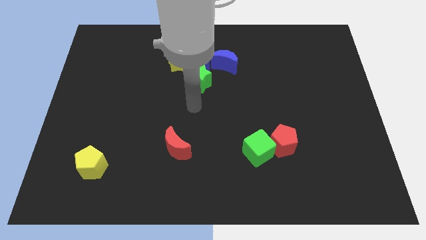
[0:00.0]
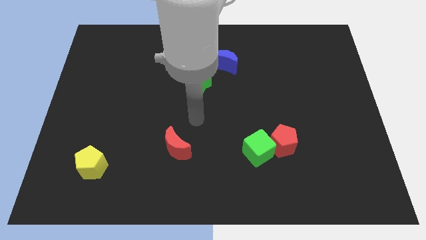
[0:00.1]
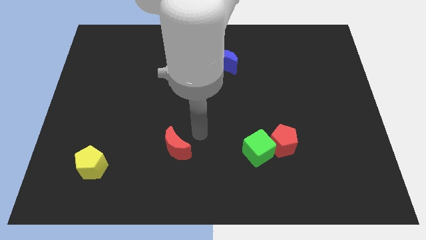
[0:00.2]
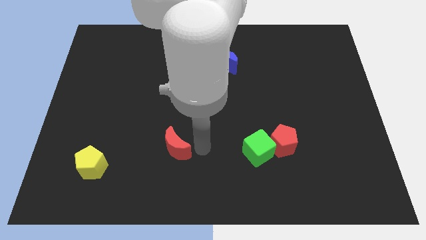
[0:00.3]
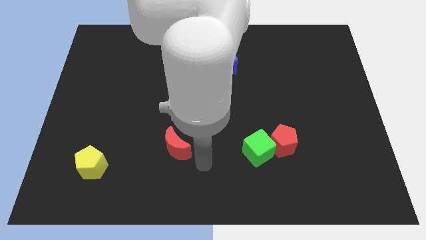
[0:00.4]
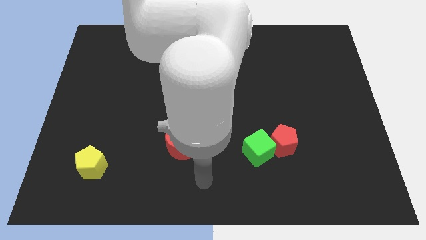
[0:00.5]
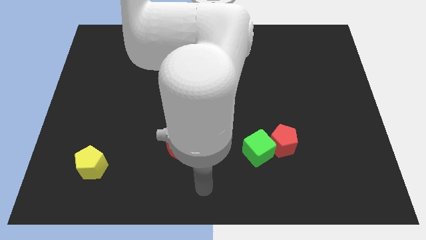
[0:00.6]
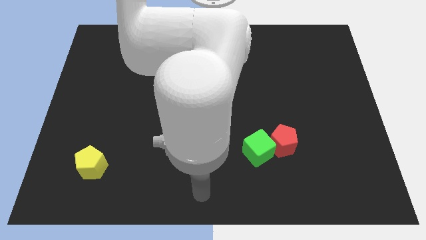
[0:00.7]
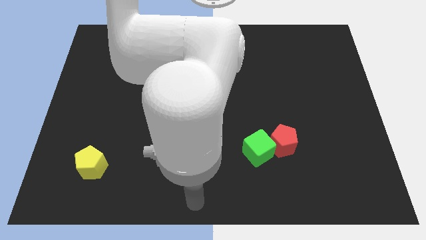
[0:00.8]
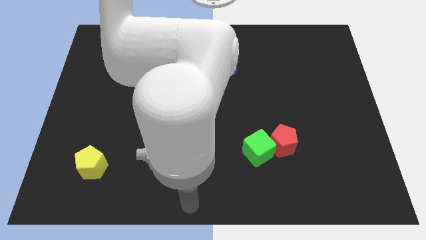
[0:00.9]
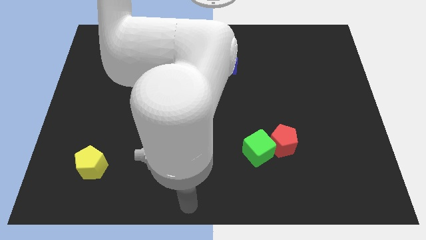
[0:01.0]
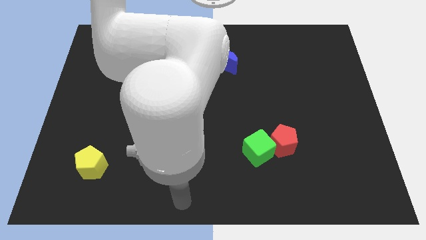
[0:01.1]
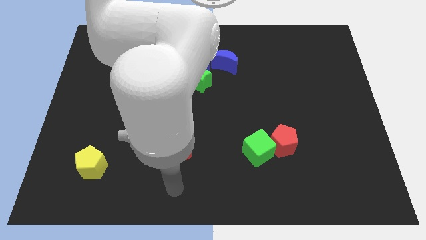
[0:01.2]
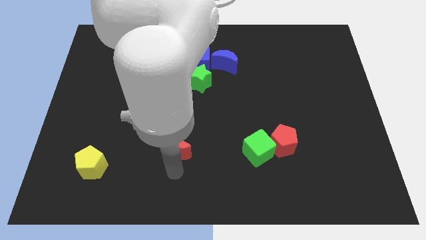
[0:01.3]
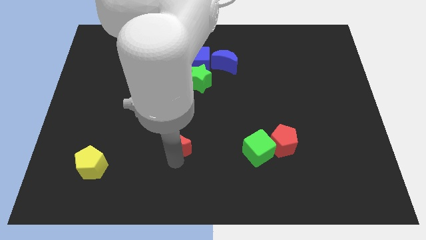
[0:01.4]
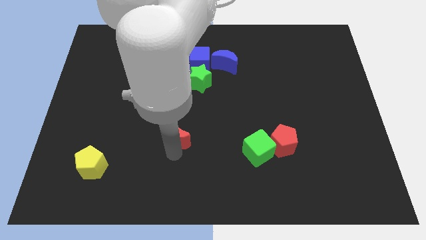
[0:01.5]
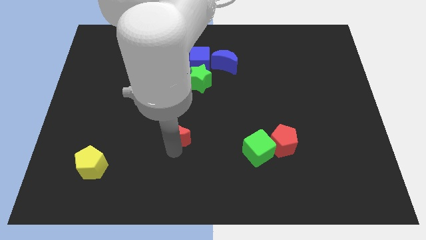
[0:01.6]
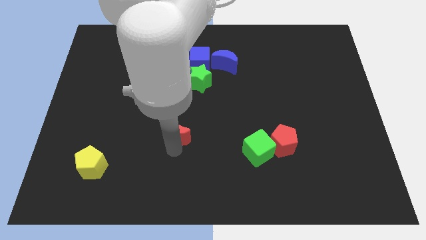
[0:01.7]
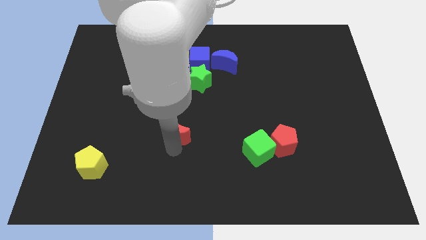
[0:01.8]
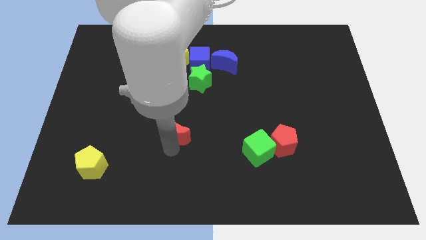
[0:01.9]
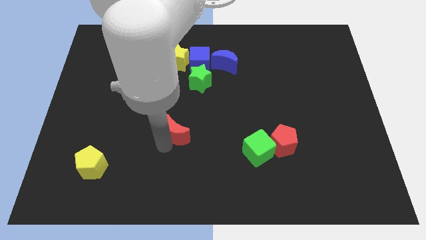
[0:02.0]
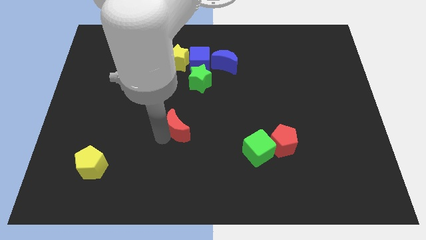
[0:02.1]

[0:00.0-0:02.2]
place the arm behind the red crescent

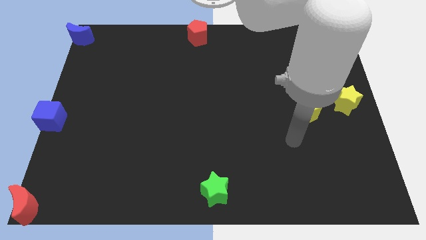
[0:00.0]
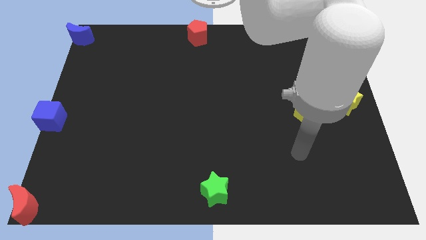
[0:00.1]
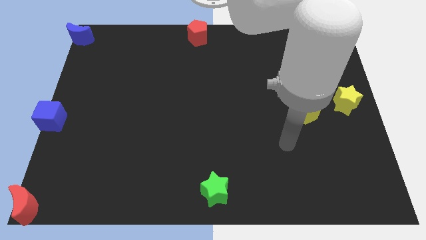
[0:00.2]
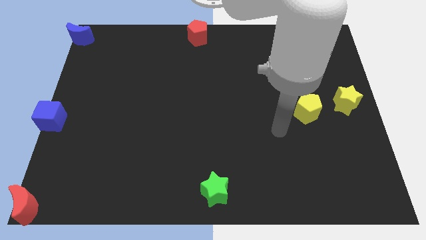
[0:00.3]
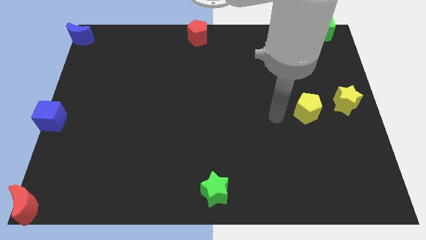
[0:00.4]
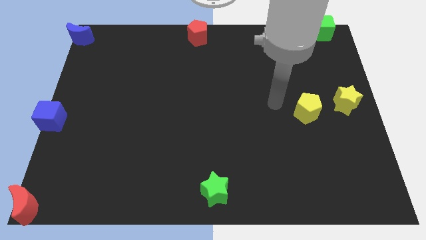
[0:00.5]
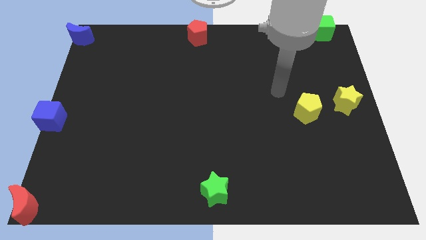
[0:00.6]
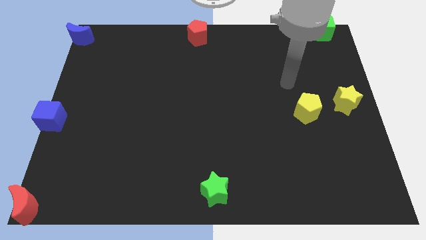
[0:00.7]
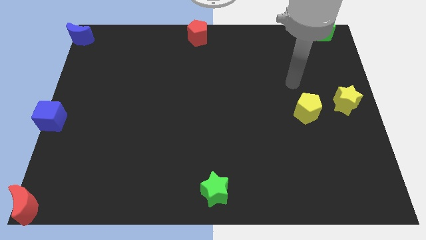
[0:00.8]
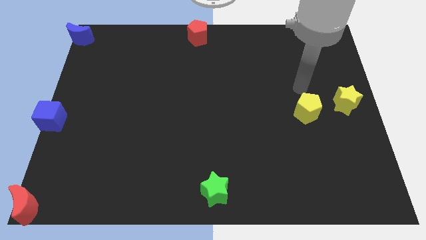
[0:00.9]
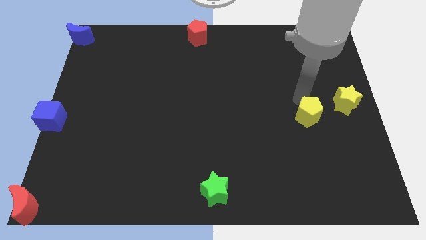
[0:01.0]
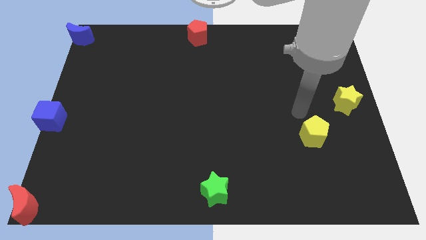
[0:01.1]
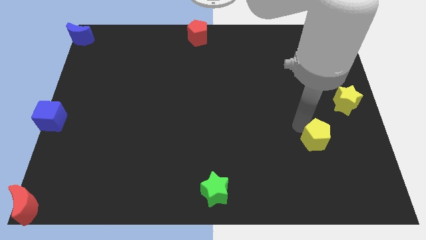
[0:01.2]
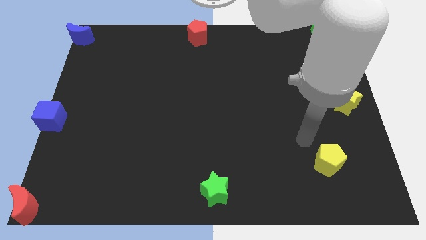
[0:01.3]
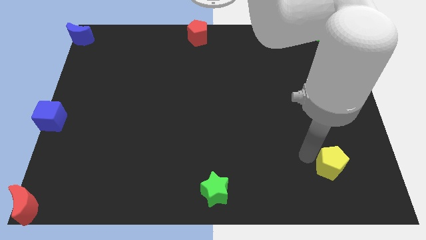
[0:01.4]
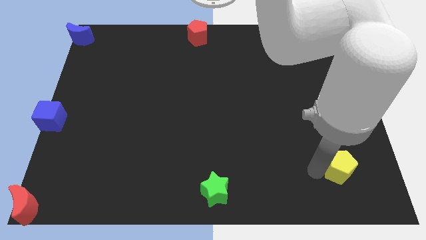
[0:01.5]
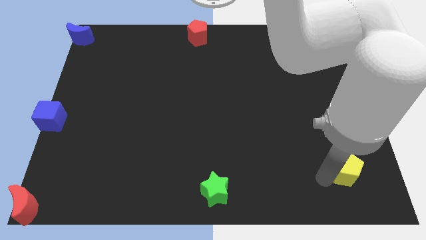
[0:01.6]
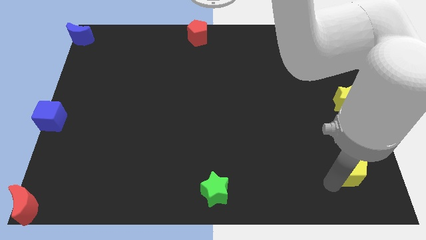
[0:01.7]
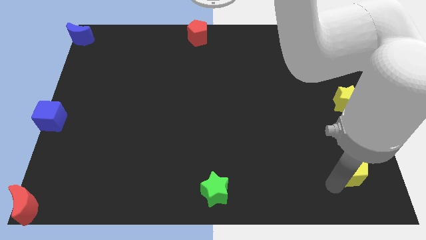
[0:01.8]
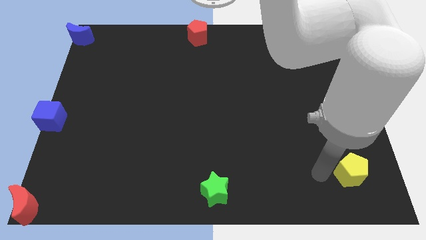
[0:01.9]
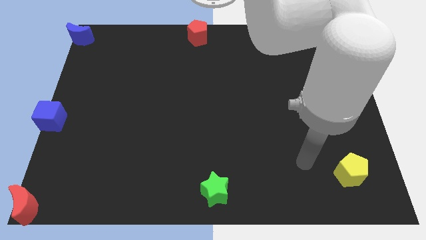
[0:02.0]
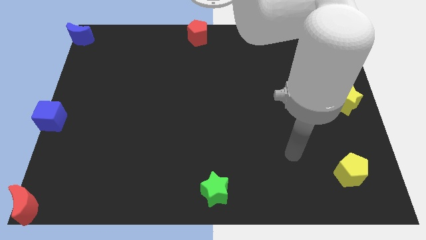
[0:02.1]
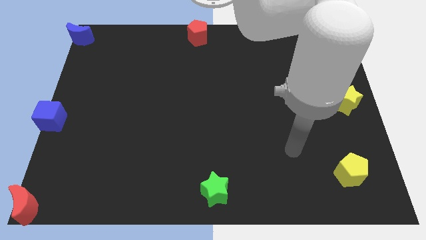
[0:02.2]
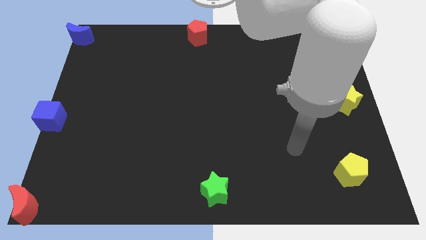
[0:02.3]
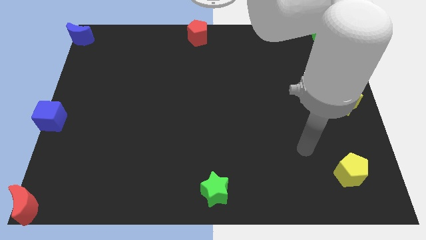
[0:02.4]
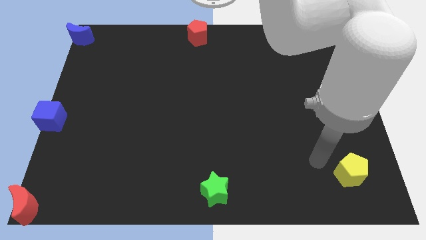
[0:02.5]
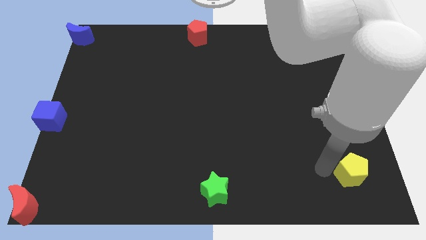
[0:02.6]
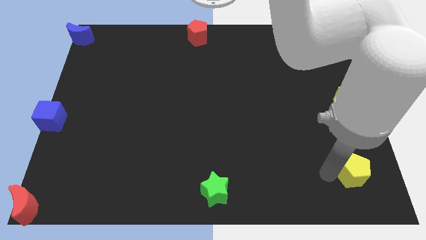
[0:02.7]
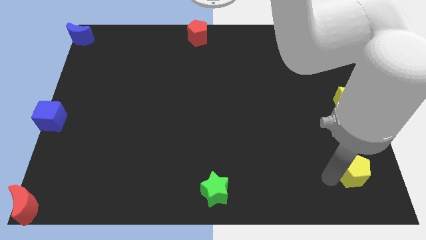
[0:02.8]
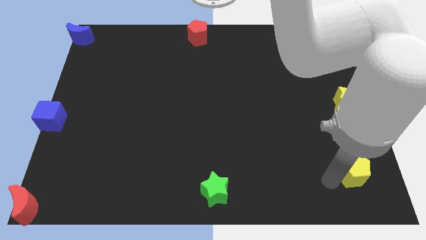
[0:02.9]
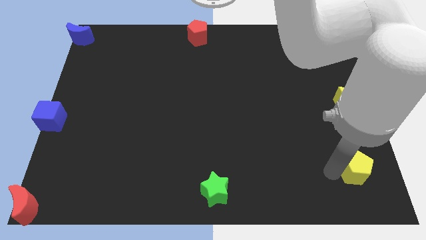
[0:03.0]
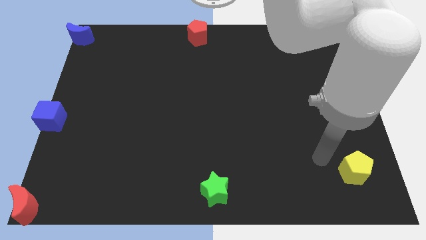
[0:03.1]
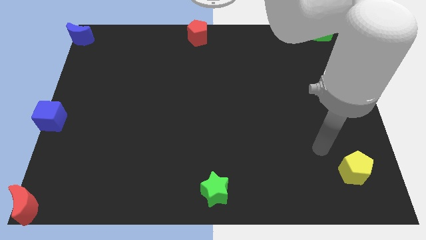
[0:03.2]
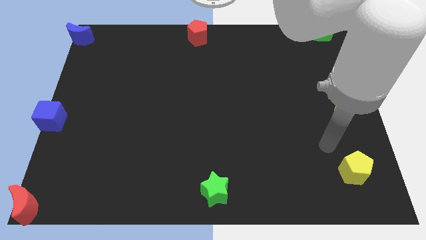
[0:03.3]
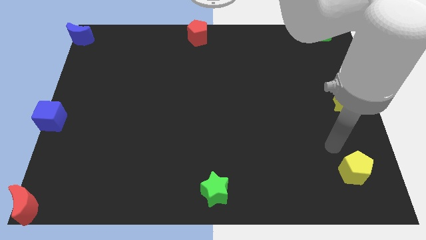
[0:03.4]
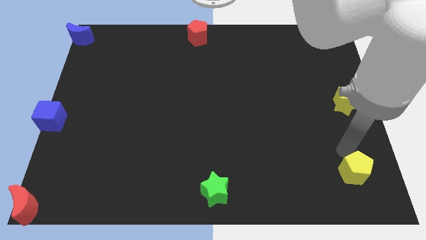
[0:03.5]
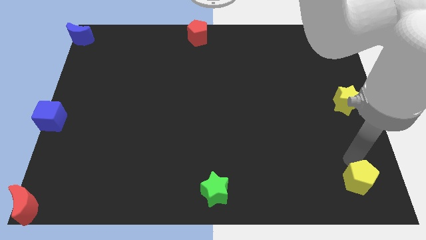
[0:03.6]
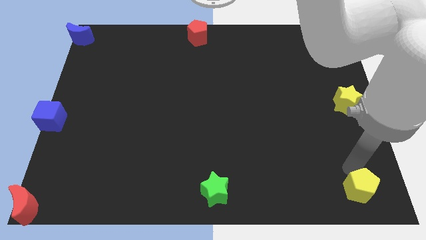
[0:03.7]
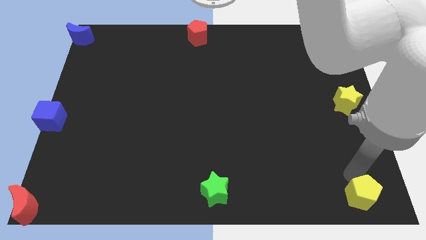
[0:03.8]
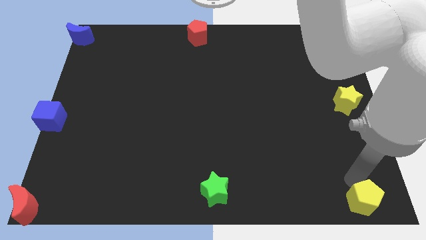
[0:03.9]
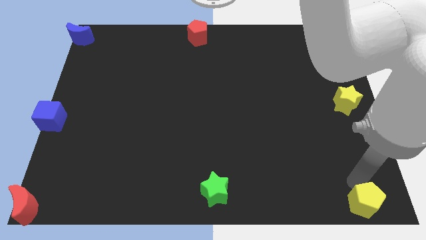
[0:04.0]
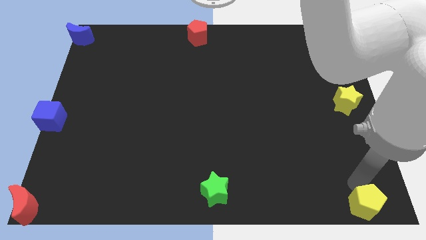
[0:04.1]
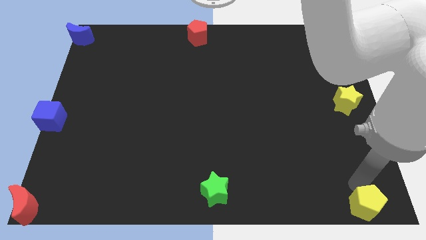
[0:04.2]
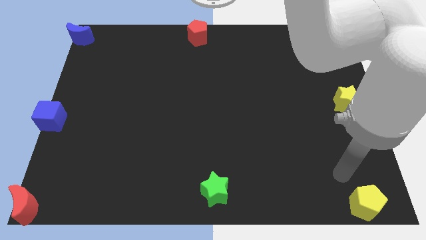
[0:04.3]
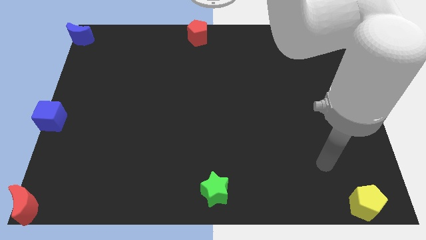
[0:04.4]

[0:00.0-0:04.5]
place the yellow pentagon to the bottom right of the board

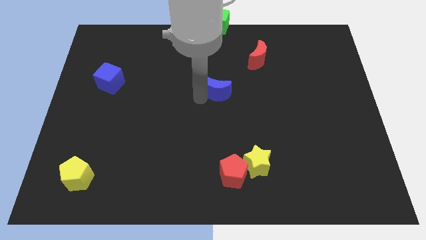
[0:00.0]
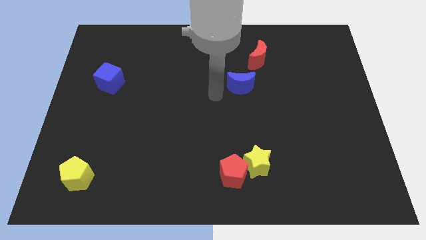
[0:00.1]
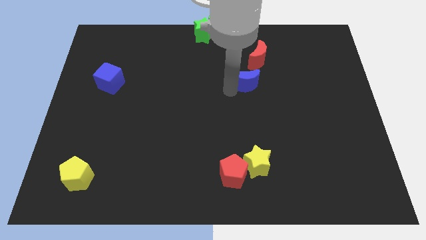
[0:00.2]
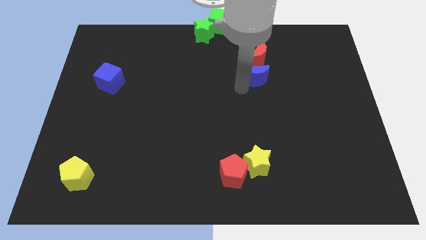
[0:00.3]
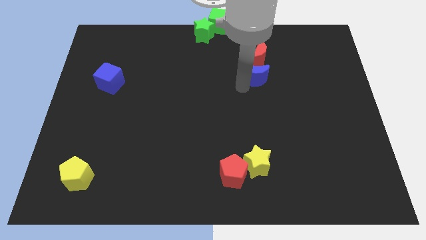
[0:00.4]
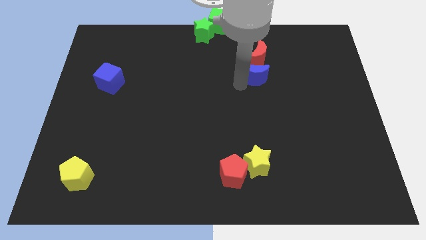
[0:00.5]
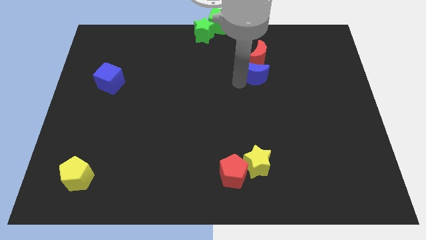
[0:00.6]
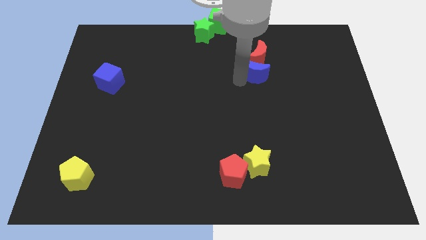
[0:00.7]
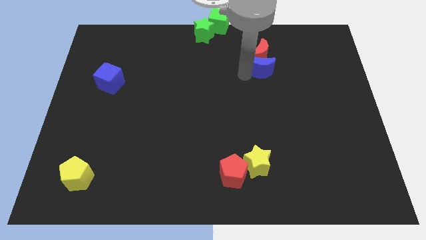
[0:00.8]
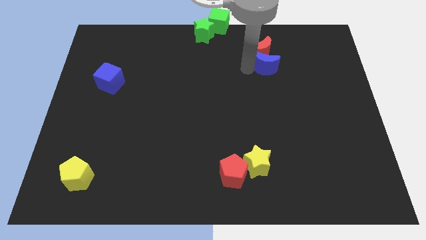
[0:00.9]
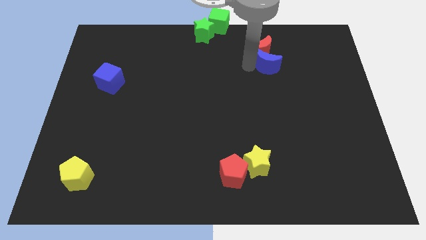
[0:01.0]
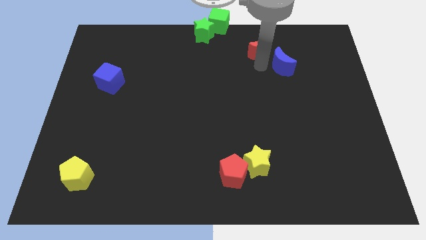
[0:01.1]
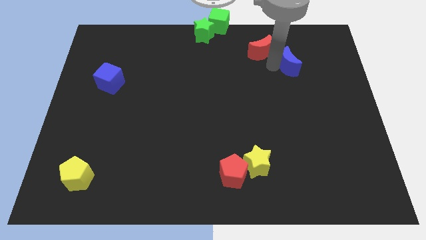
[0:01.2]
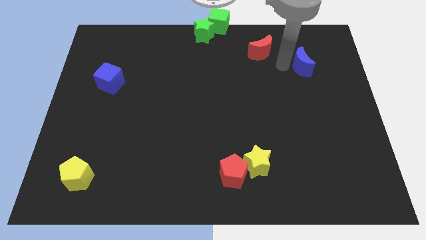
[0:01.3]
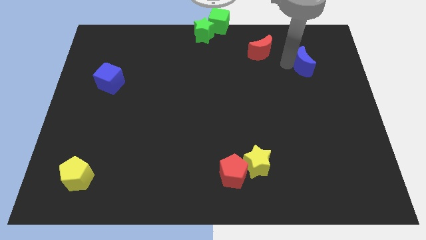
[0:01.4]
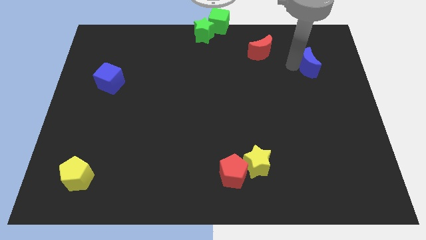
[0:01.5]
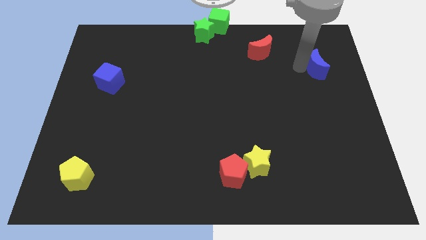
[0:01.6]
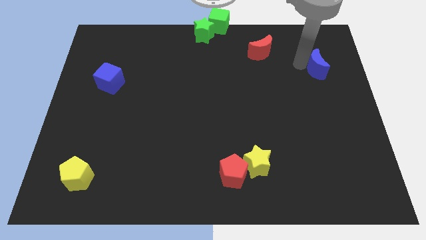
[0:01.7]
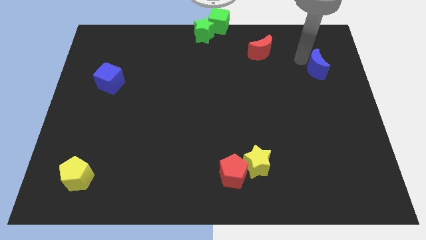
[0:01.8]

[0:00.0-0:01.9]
separate blue moon and red moon

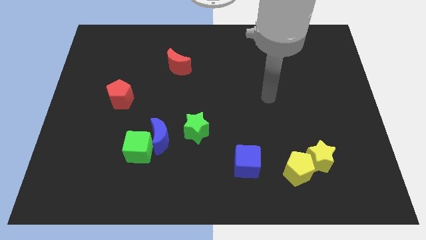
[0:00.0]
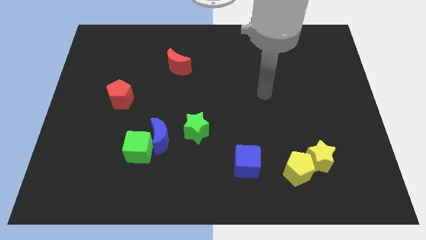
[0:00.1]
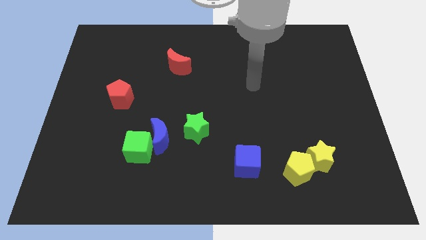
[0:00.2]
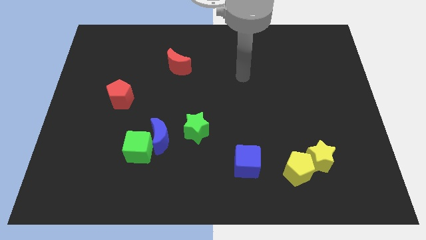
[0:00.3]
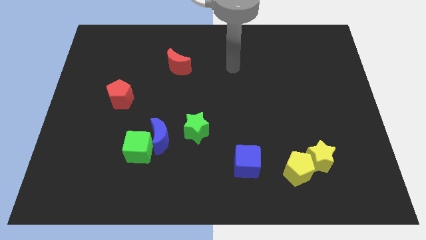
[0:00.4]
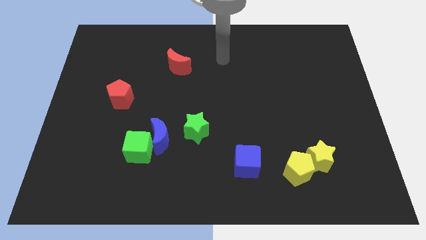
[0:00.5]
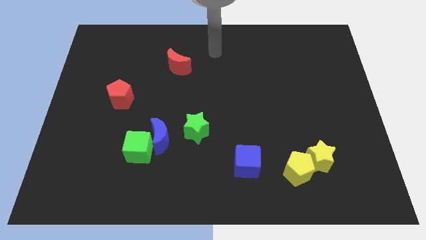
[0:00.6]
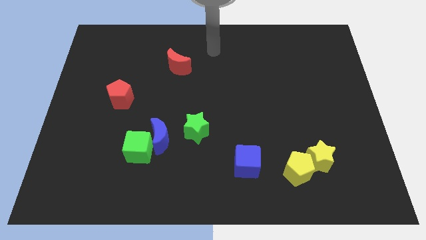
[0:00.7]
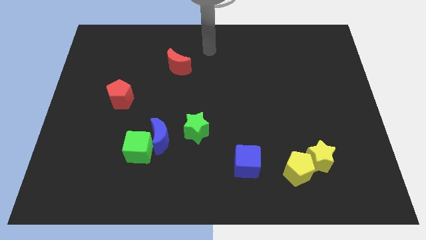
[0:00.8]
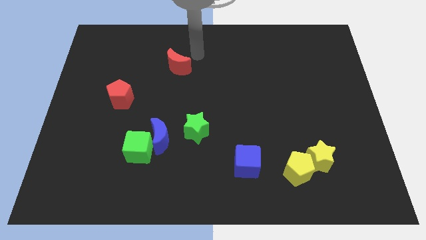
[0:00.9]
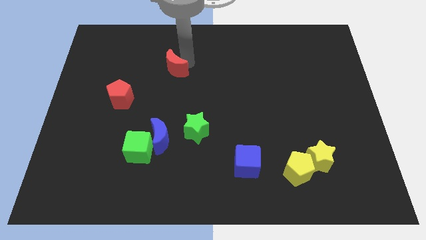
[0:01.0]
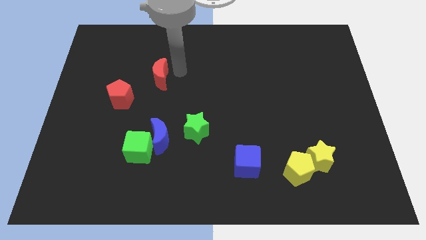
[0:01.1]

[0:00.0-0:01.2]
move your arm close to the red moon
